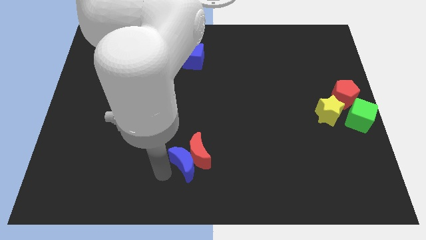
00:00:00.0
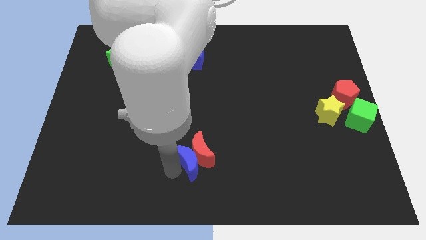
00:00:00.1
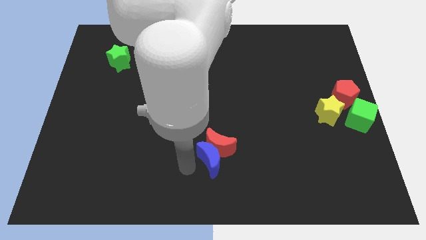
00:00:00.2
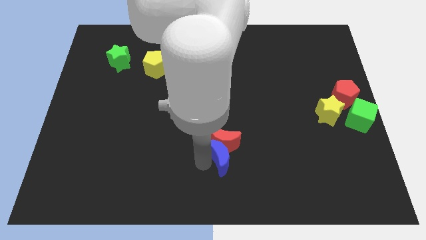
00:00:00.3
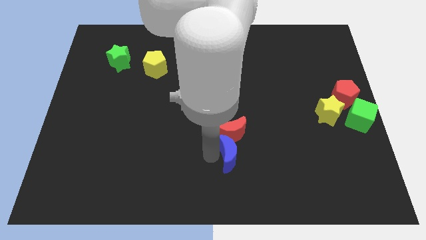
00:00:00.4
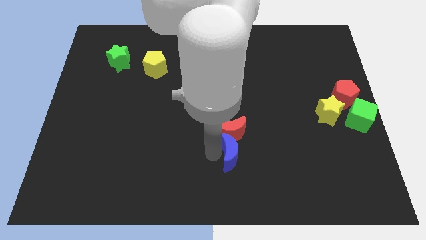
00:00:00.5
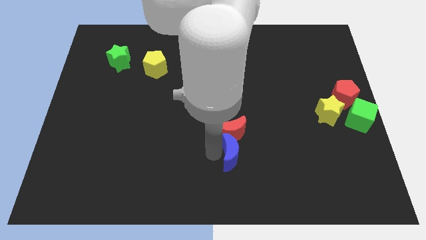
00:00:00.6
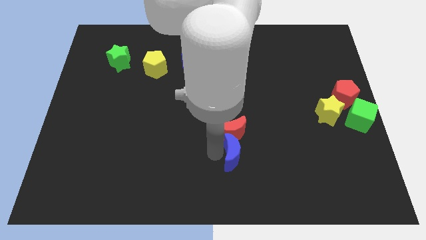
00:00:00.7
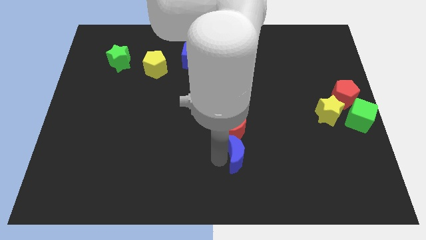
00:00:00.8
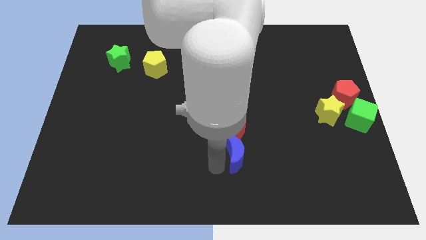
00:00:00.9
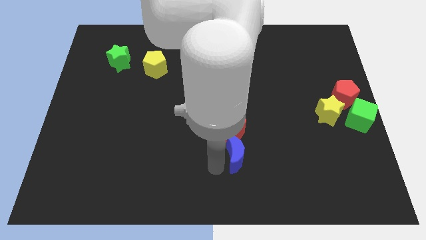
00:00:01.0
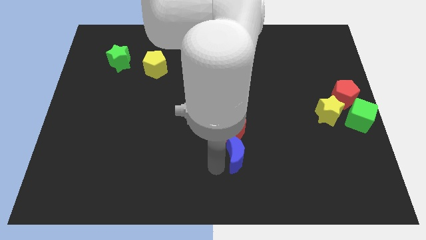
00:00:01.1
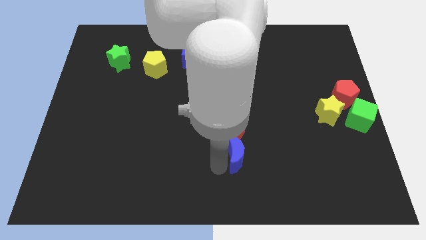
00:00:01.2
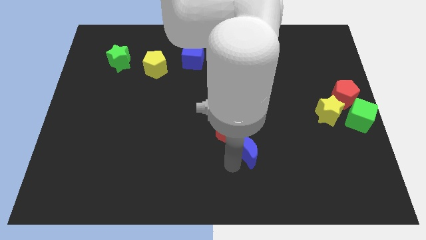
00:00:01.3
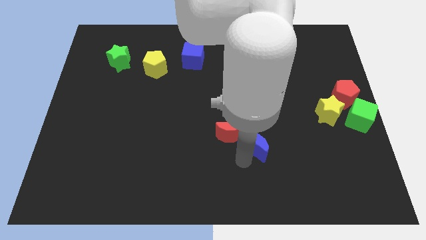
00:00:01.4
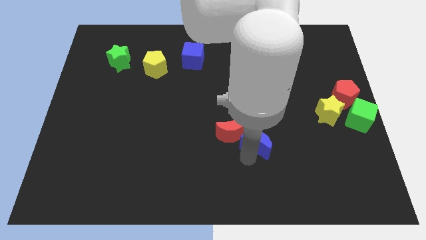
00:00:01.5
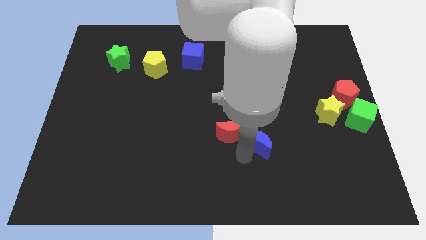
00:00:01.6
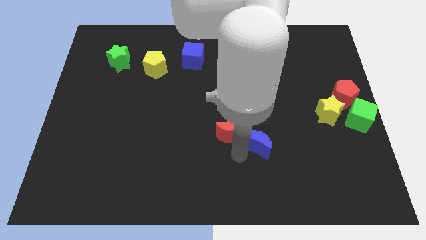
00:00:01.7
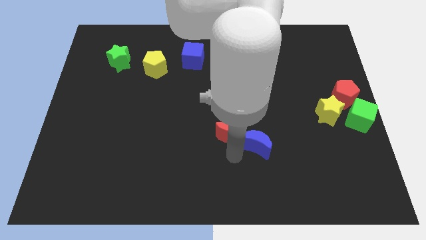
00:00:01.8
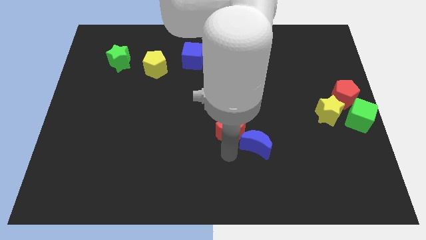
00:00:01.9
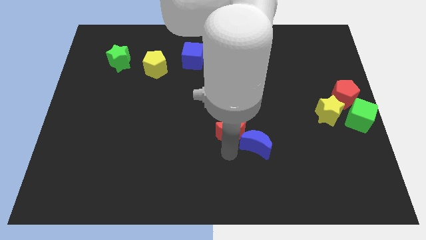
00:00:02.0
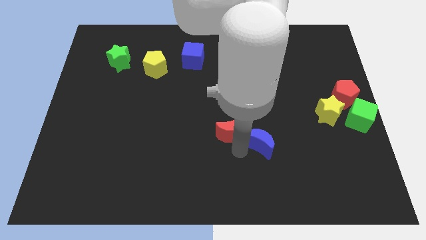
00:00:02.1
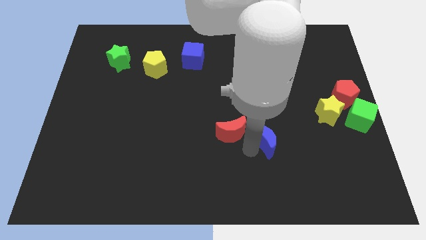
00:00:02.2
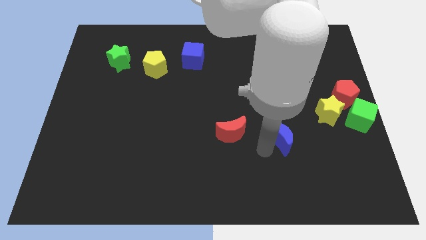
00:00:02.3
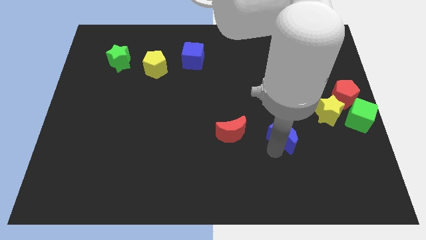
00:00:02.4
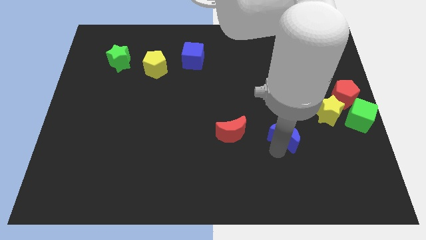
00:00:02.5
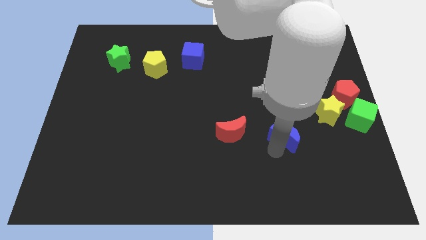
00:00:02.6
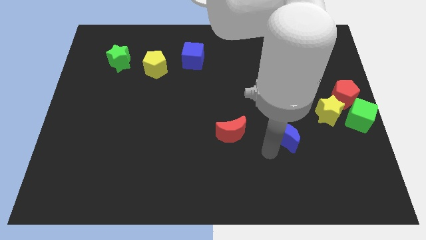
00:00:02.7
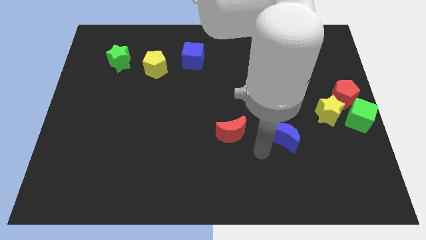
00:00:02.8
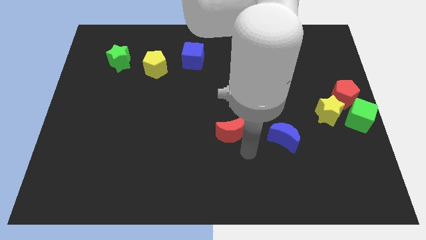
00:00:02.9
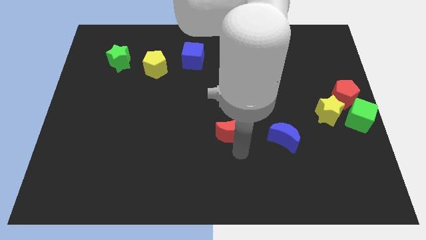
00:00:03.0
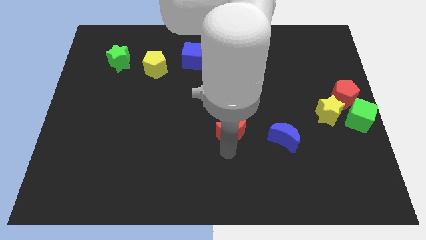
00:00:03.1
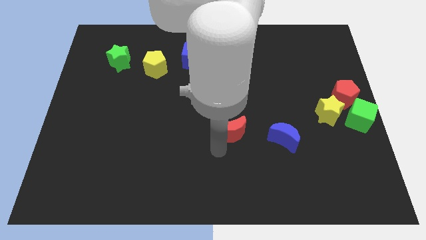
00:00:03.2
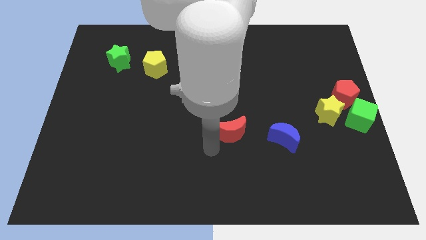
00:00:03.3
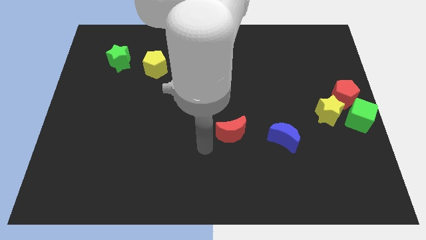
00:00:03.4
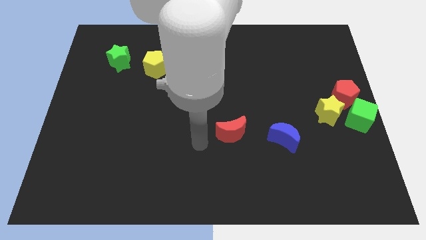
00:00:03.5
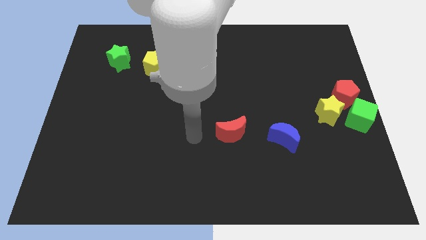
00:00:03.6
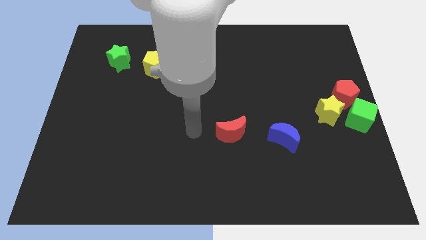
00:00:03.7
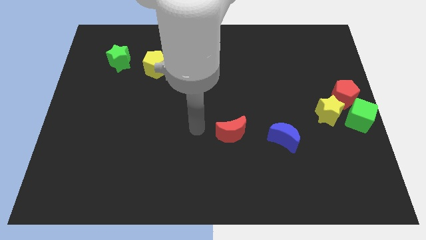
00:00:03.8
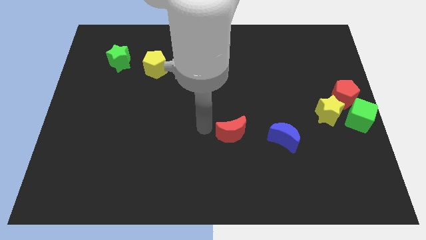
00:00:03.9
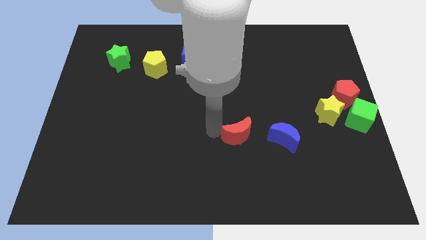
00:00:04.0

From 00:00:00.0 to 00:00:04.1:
push the blue crescent towards the right side of the red moon

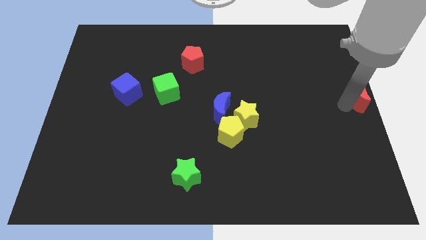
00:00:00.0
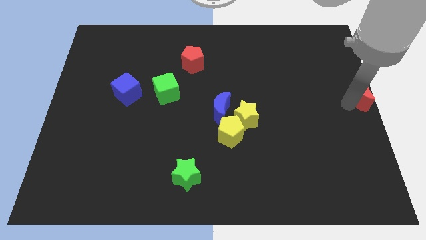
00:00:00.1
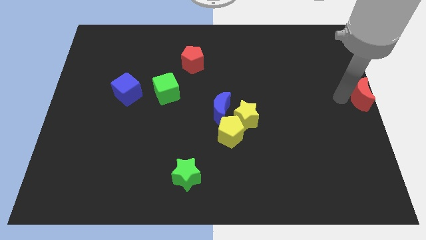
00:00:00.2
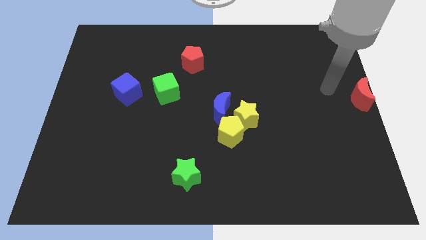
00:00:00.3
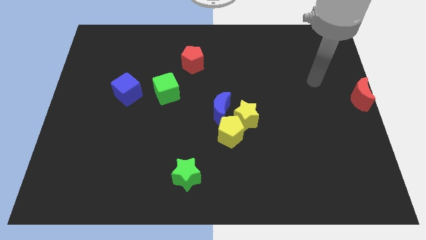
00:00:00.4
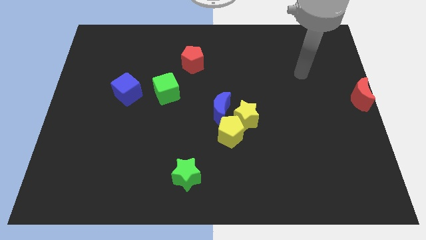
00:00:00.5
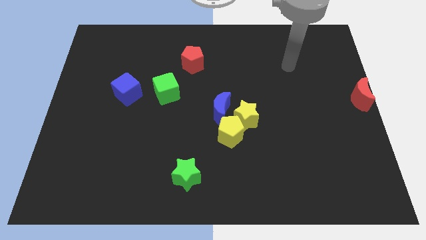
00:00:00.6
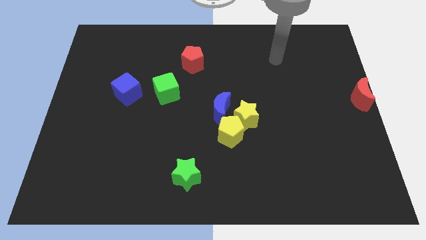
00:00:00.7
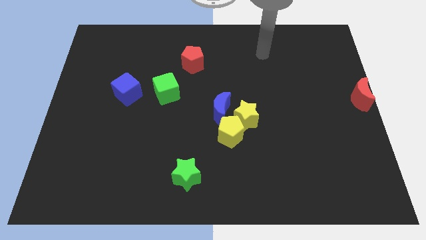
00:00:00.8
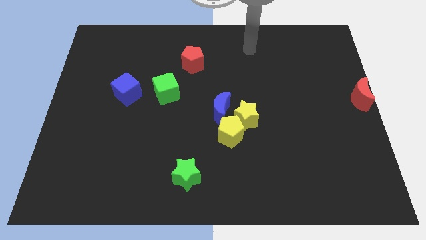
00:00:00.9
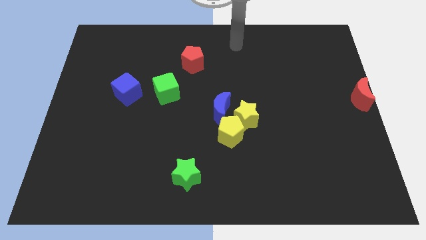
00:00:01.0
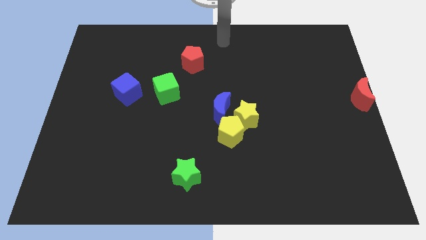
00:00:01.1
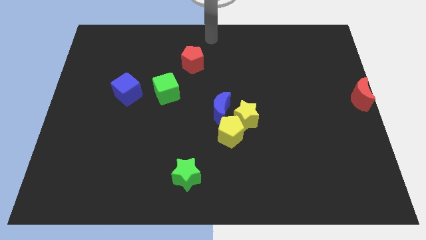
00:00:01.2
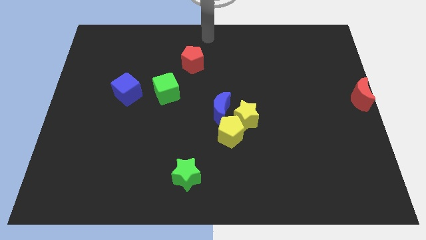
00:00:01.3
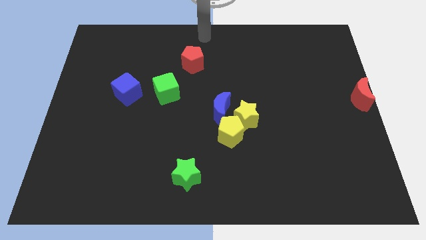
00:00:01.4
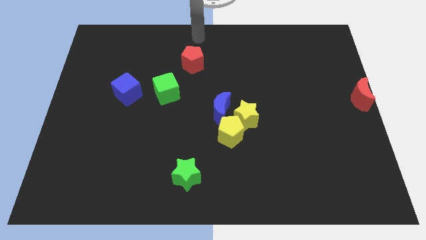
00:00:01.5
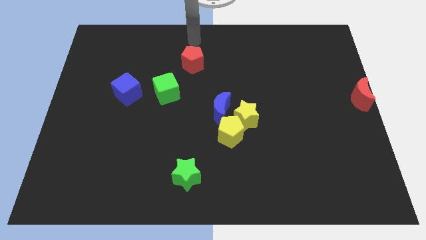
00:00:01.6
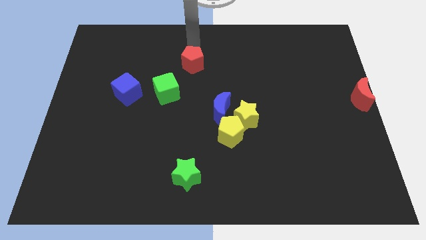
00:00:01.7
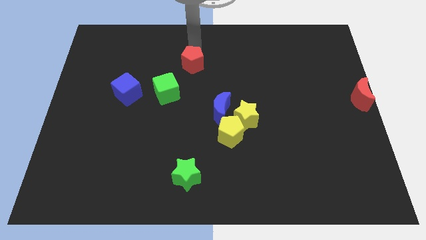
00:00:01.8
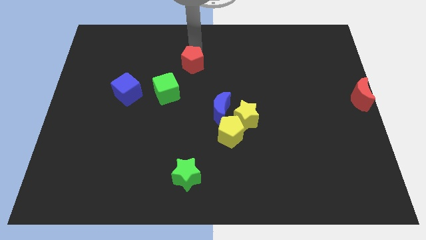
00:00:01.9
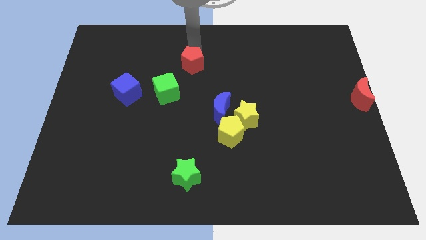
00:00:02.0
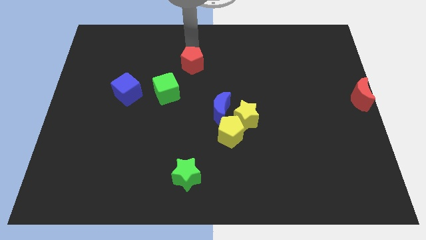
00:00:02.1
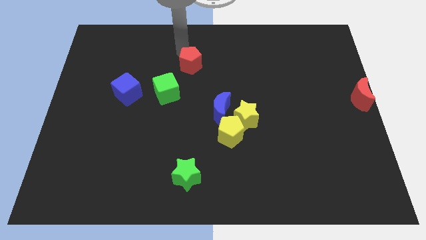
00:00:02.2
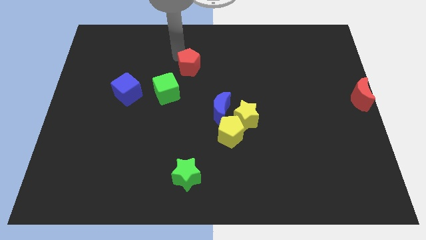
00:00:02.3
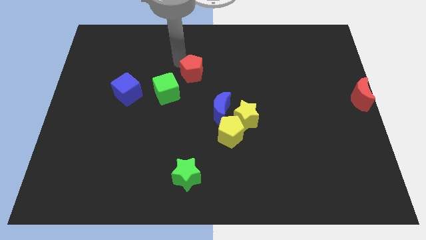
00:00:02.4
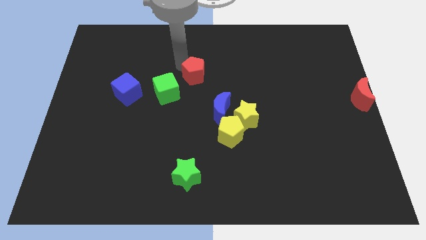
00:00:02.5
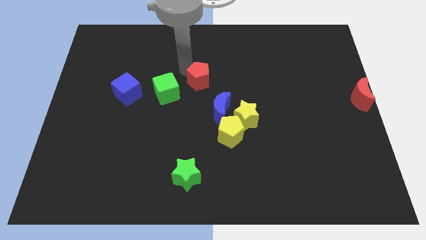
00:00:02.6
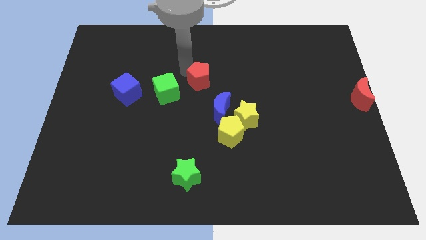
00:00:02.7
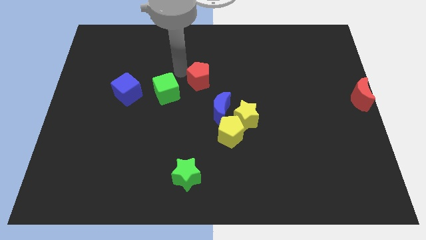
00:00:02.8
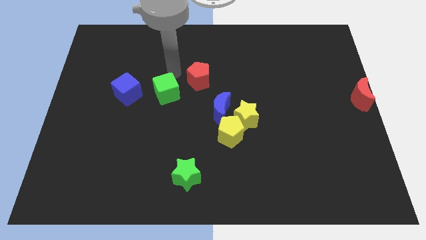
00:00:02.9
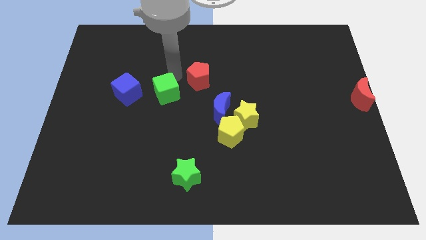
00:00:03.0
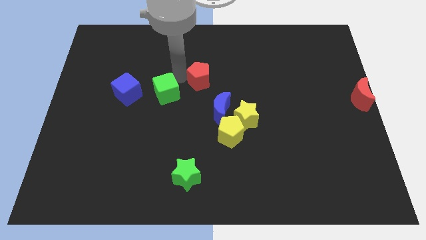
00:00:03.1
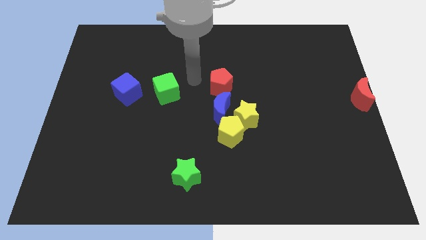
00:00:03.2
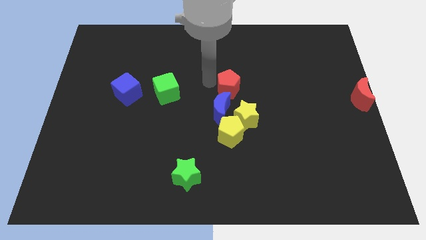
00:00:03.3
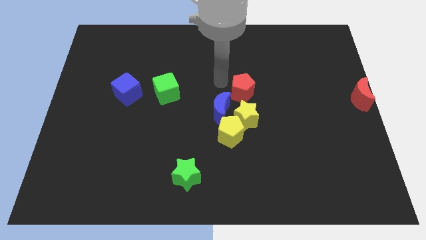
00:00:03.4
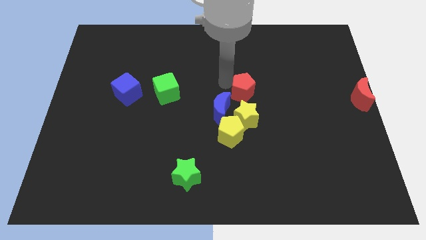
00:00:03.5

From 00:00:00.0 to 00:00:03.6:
slide the red pentagon vertically on top of the yellow star

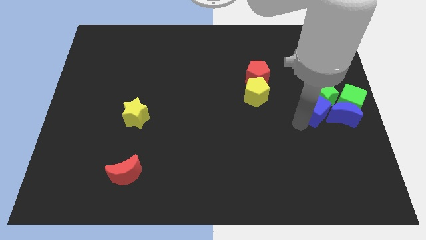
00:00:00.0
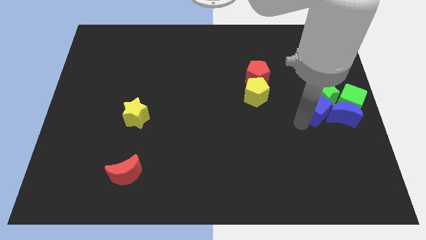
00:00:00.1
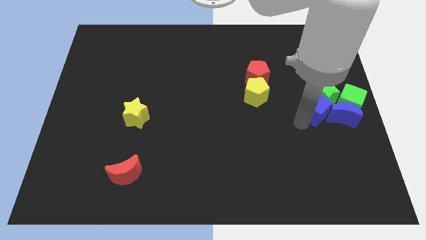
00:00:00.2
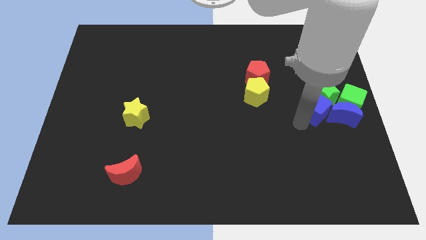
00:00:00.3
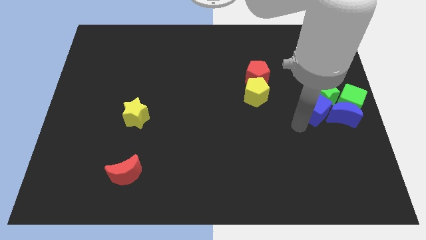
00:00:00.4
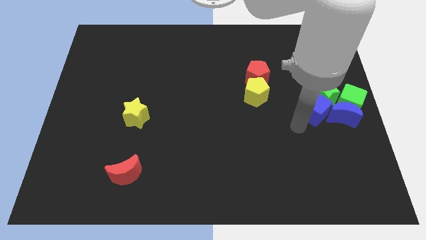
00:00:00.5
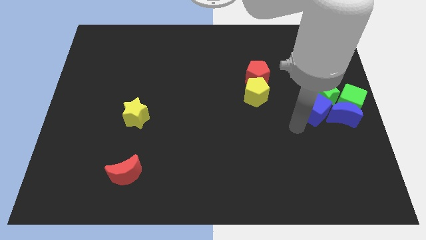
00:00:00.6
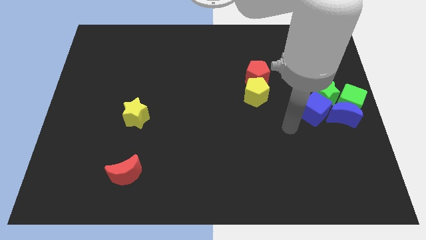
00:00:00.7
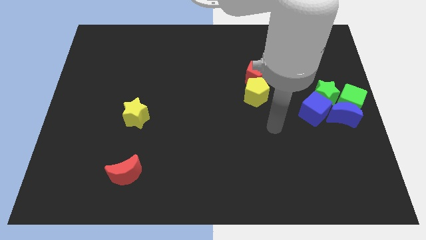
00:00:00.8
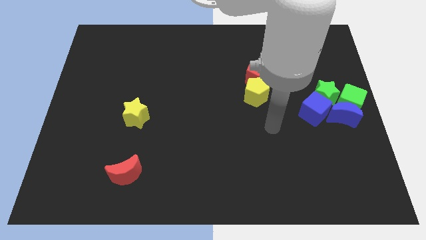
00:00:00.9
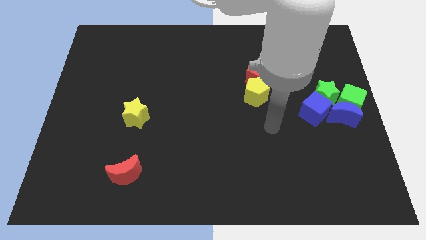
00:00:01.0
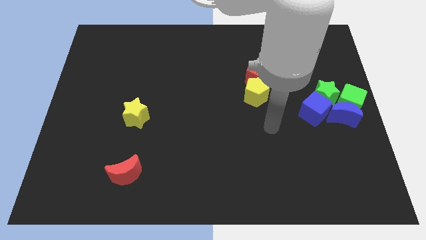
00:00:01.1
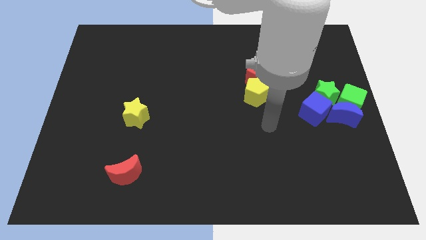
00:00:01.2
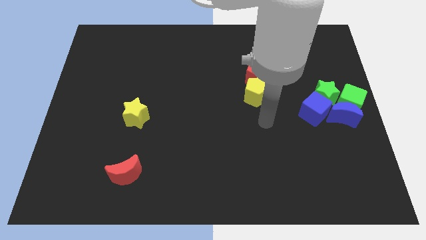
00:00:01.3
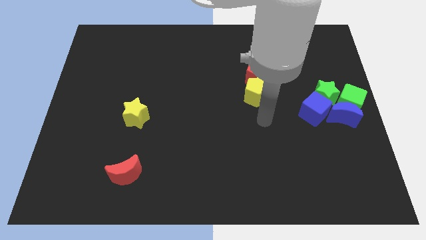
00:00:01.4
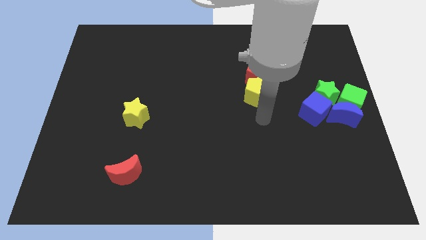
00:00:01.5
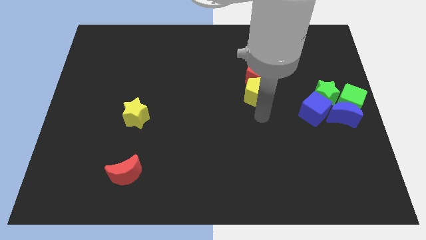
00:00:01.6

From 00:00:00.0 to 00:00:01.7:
move your arm towards the yellow pentagon
